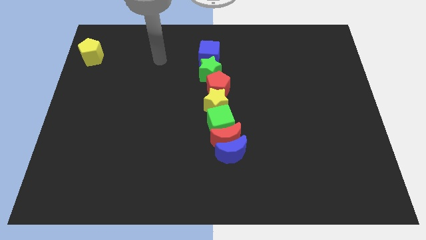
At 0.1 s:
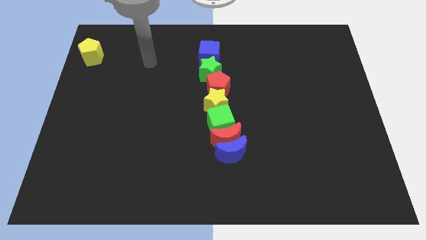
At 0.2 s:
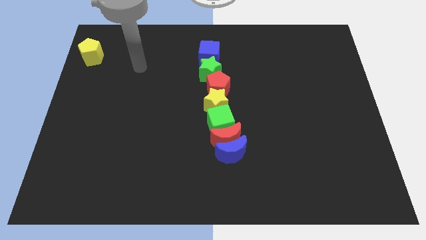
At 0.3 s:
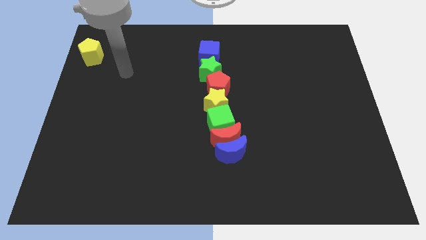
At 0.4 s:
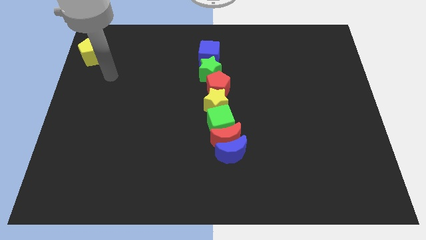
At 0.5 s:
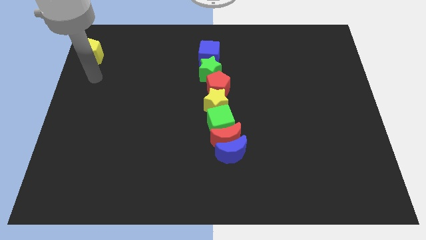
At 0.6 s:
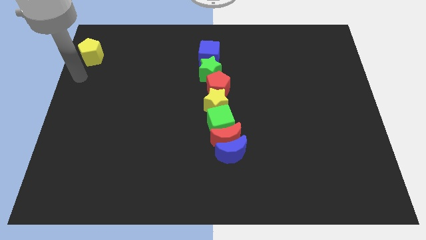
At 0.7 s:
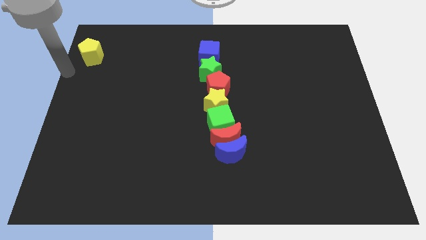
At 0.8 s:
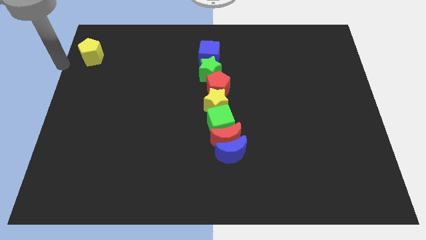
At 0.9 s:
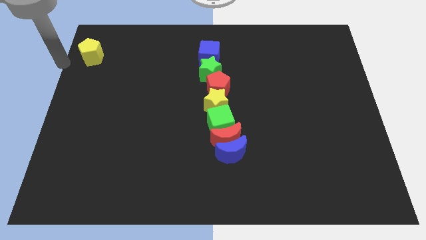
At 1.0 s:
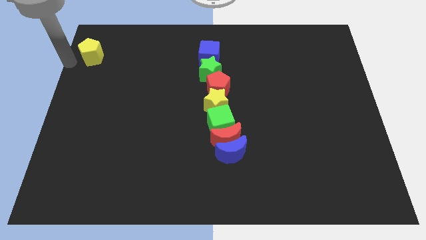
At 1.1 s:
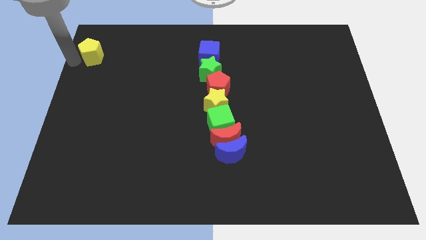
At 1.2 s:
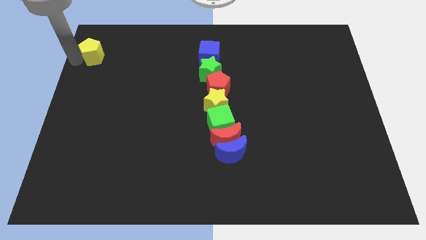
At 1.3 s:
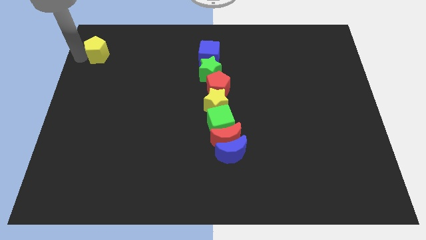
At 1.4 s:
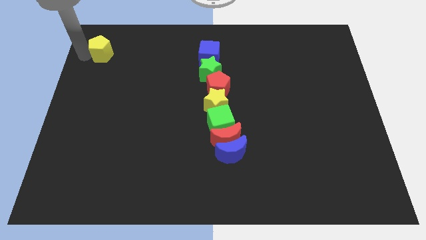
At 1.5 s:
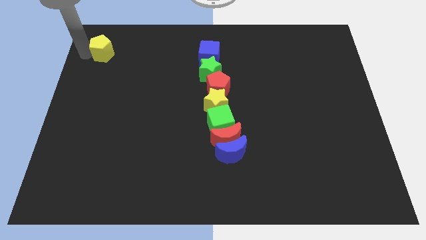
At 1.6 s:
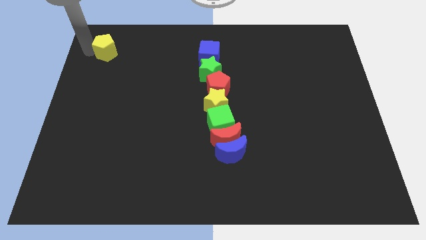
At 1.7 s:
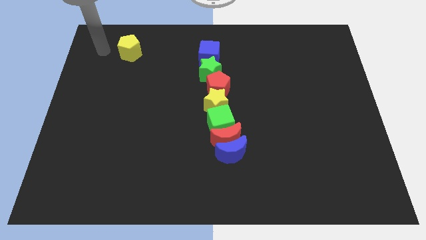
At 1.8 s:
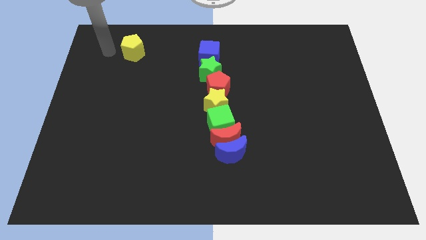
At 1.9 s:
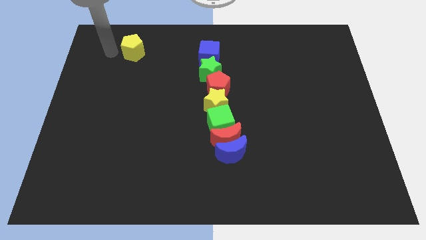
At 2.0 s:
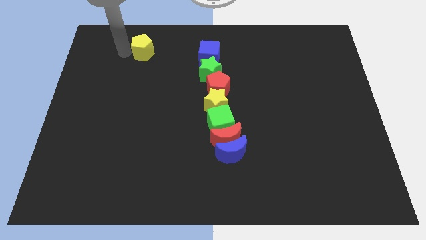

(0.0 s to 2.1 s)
push the yellow pentagon to the right

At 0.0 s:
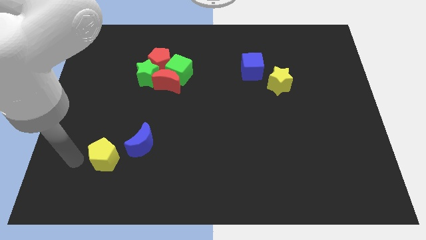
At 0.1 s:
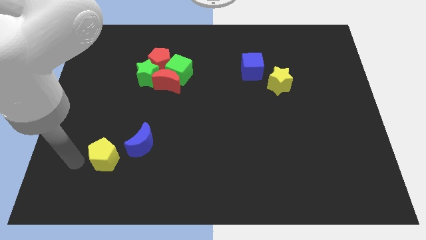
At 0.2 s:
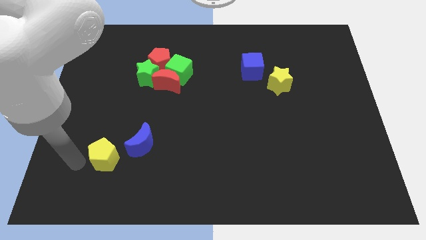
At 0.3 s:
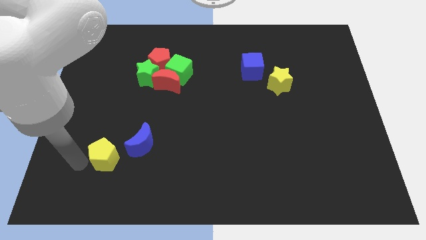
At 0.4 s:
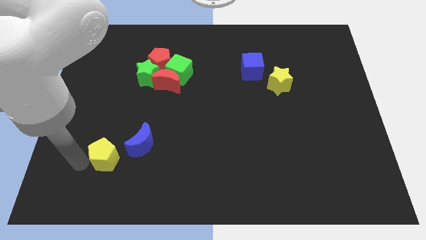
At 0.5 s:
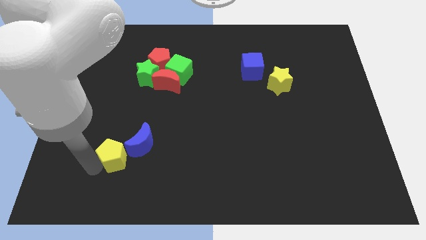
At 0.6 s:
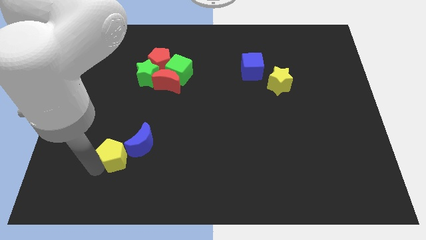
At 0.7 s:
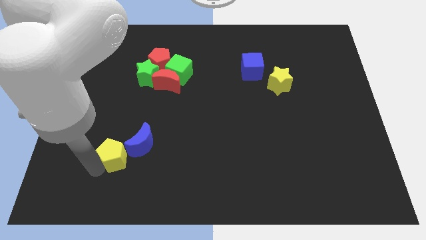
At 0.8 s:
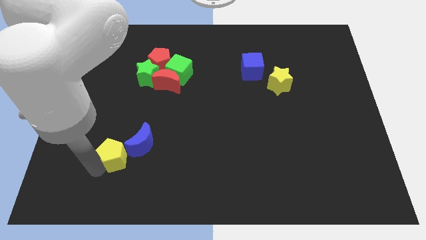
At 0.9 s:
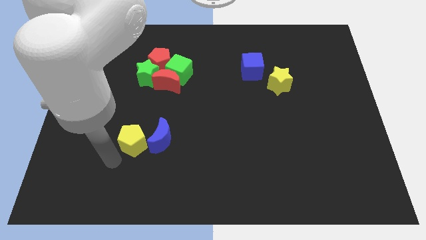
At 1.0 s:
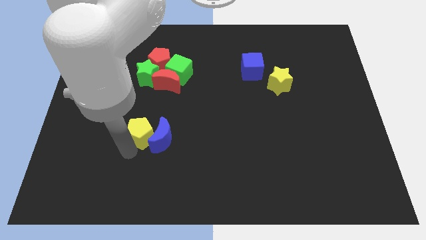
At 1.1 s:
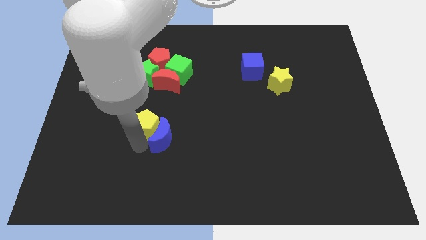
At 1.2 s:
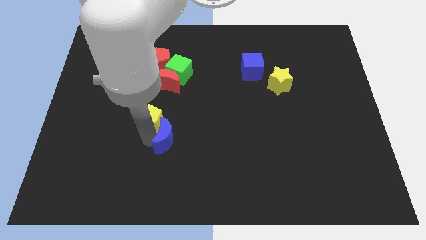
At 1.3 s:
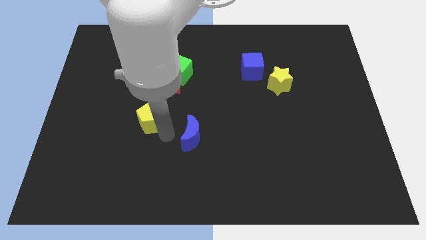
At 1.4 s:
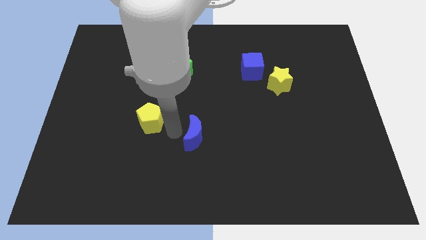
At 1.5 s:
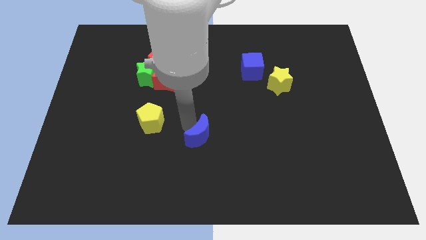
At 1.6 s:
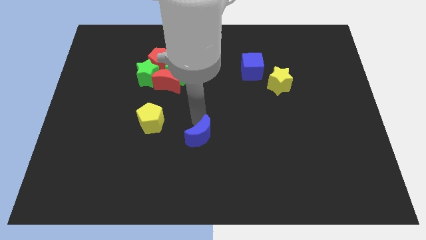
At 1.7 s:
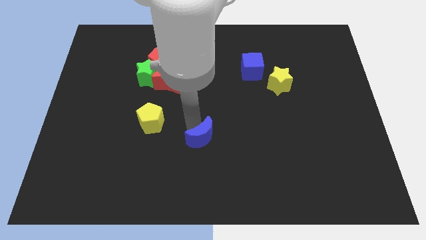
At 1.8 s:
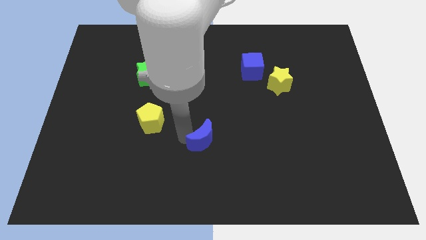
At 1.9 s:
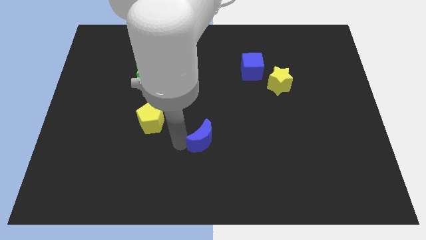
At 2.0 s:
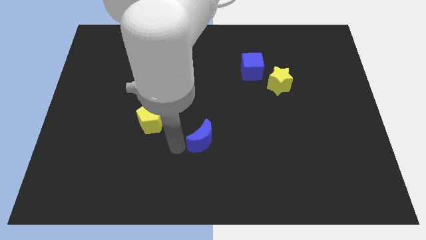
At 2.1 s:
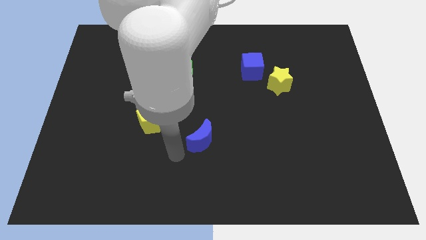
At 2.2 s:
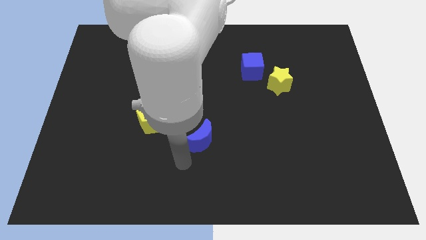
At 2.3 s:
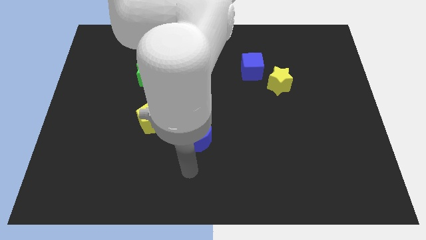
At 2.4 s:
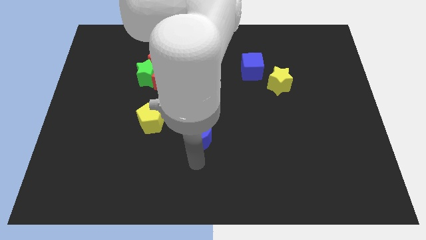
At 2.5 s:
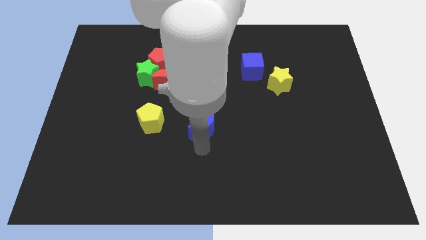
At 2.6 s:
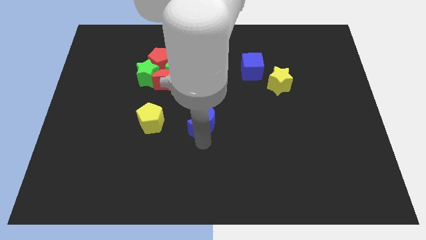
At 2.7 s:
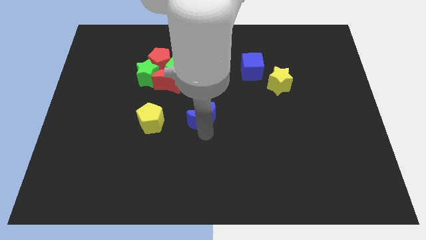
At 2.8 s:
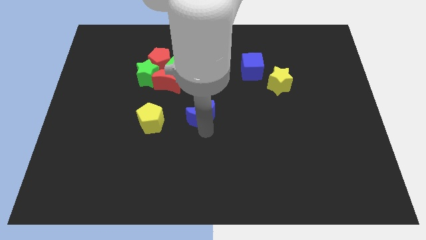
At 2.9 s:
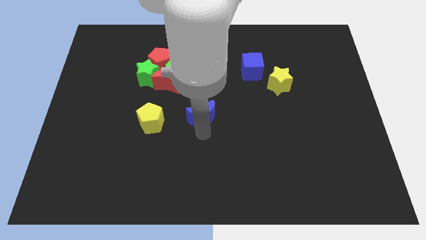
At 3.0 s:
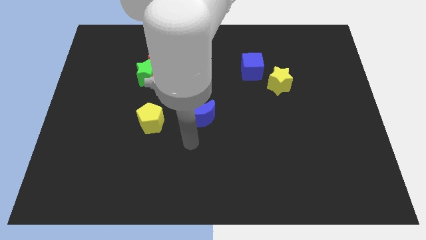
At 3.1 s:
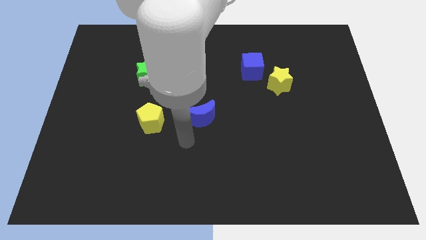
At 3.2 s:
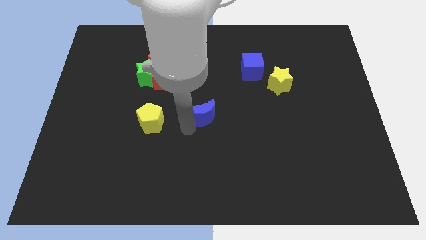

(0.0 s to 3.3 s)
place the blue moon parallel to the yellow pentagon

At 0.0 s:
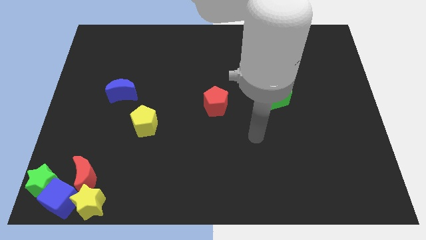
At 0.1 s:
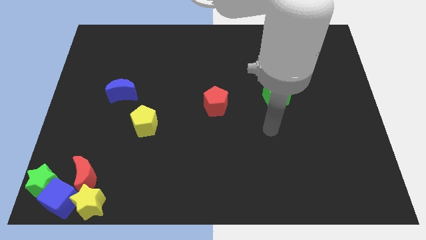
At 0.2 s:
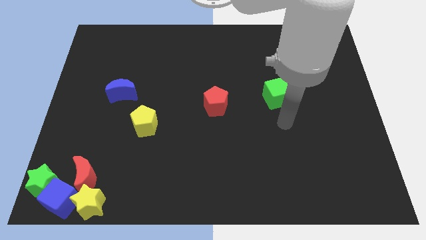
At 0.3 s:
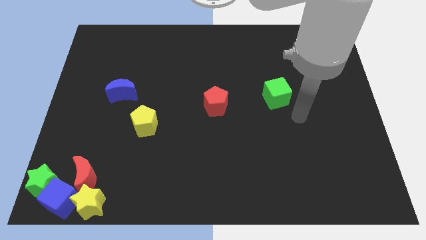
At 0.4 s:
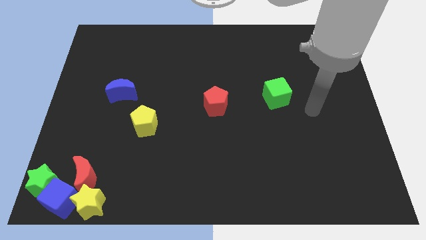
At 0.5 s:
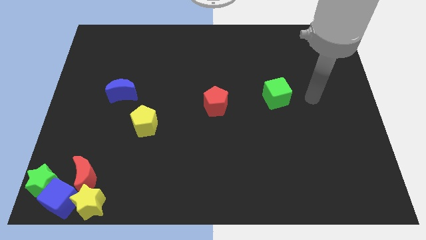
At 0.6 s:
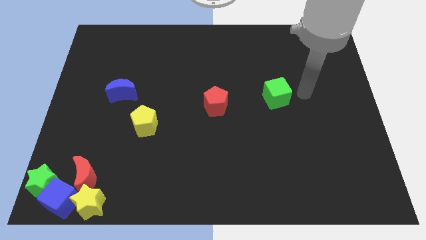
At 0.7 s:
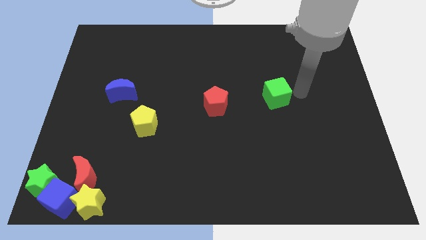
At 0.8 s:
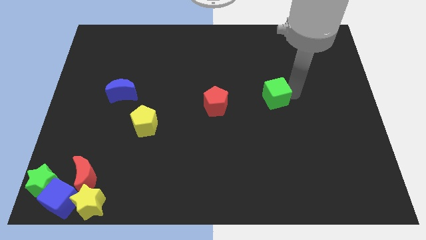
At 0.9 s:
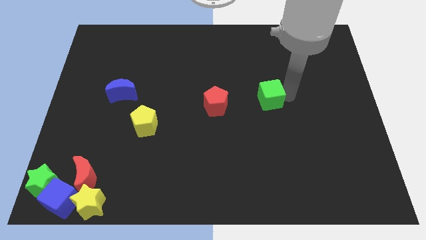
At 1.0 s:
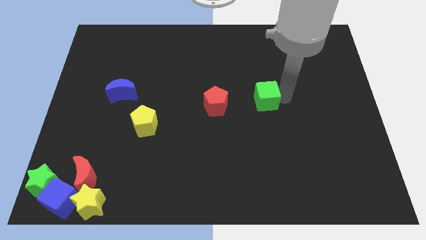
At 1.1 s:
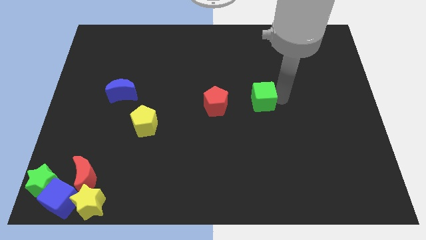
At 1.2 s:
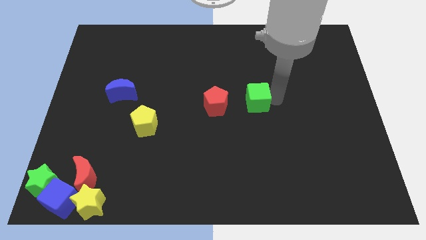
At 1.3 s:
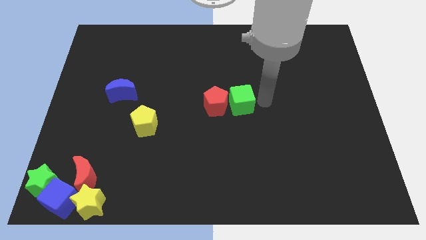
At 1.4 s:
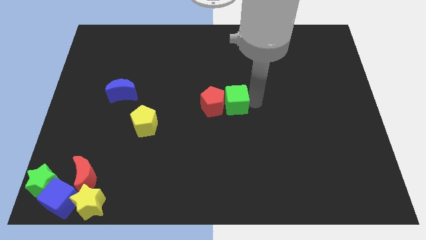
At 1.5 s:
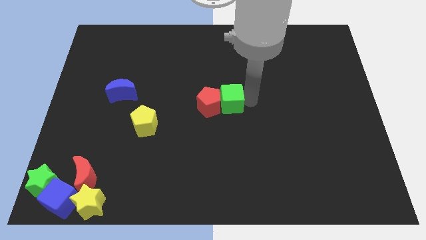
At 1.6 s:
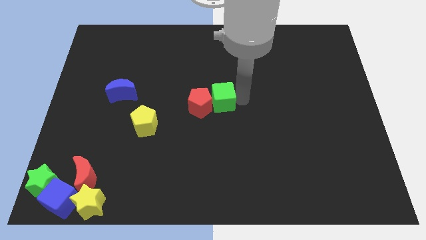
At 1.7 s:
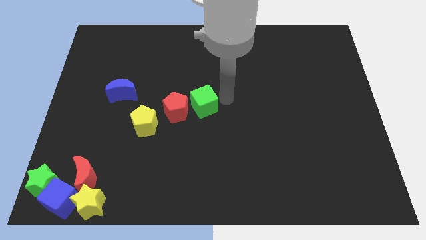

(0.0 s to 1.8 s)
move green cube into red pentagon

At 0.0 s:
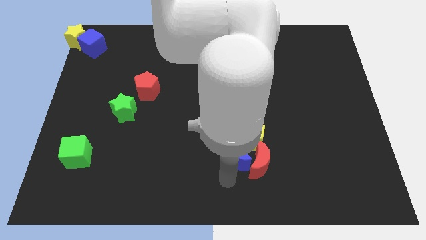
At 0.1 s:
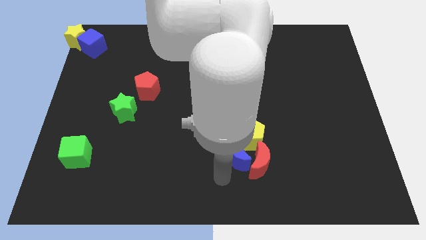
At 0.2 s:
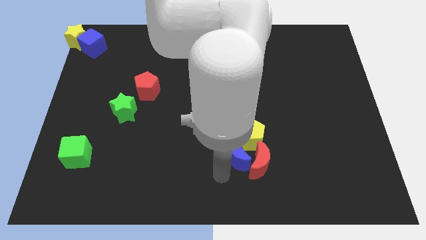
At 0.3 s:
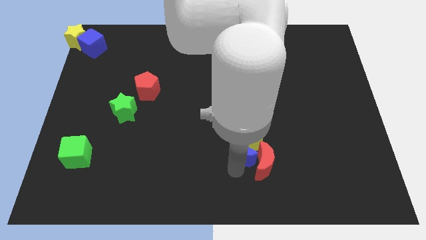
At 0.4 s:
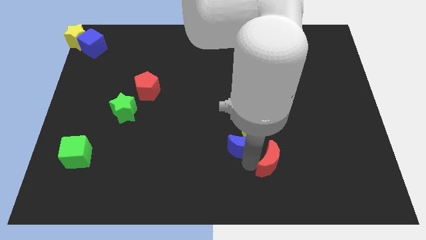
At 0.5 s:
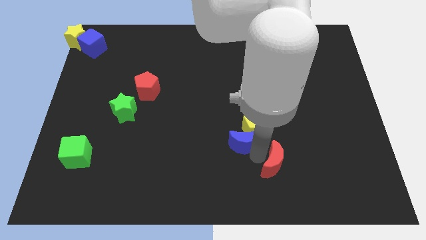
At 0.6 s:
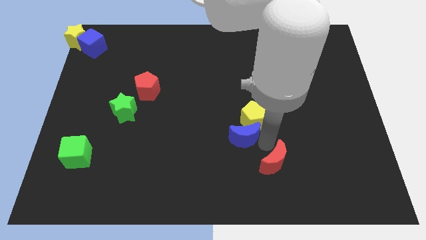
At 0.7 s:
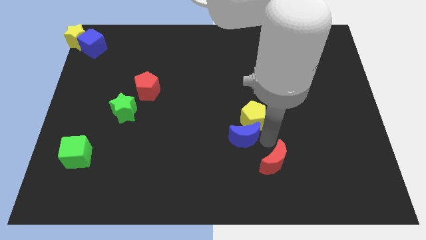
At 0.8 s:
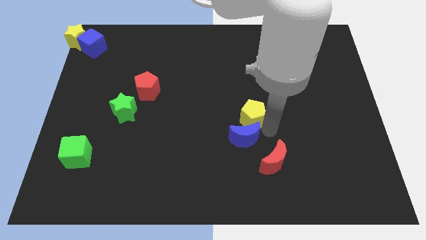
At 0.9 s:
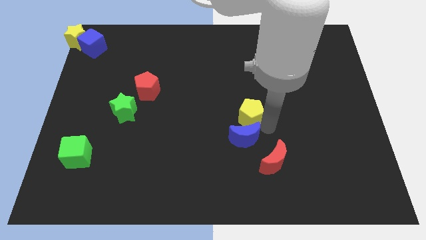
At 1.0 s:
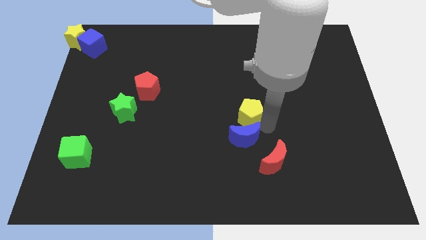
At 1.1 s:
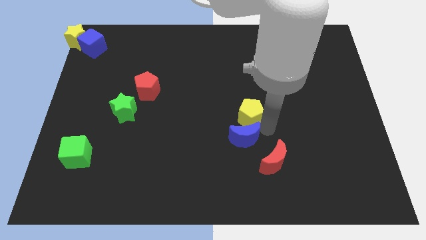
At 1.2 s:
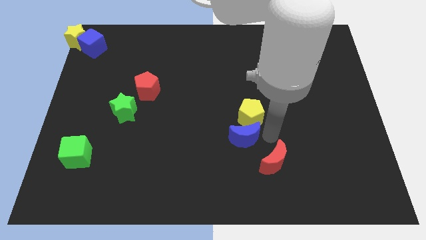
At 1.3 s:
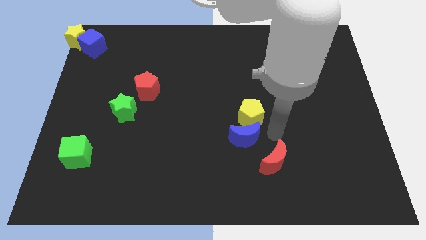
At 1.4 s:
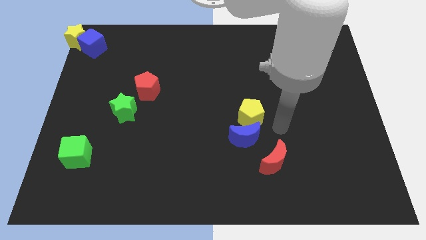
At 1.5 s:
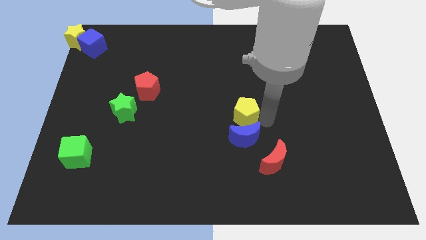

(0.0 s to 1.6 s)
push yellow pentagon and blue crescent little upwards
